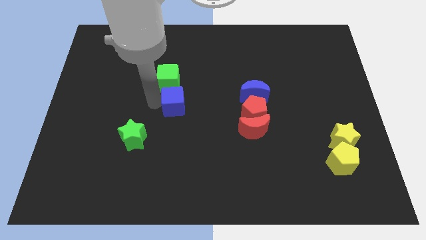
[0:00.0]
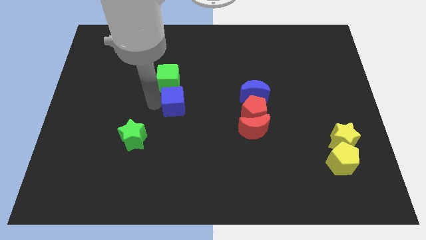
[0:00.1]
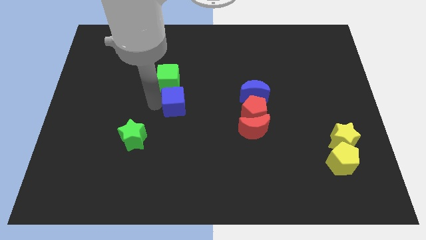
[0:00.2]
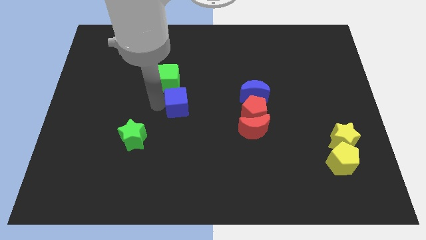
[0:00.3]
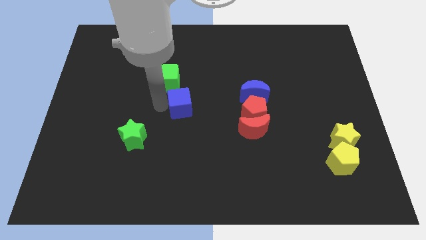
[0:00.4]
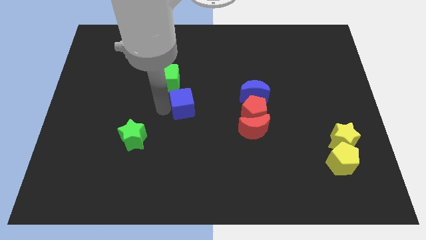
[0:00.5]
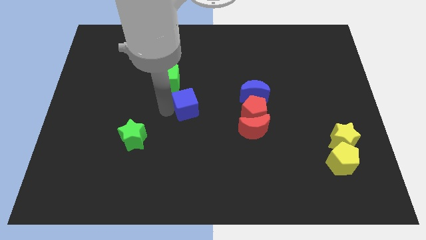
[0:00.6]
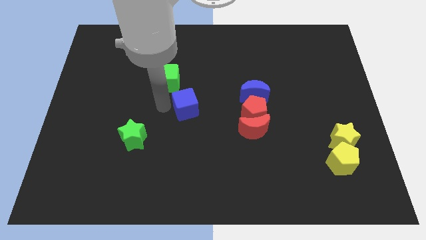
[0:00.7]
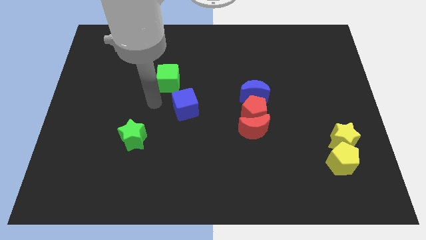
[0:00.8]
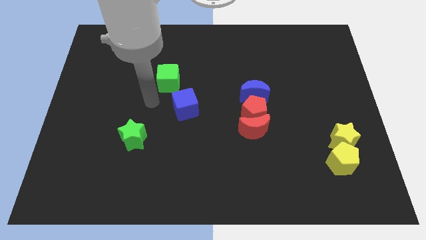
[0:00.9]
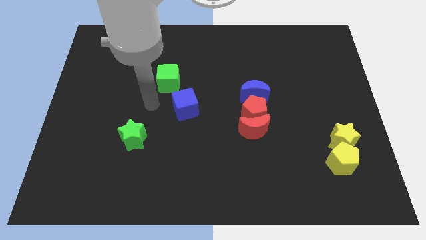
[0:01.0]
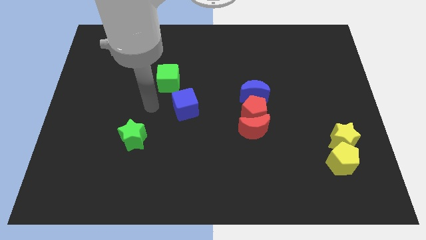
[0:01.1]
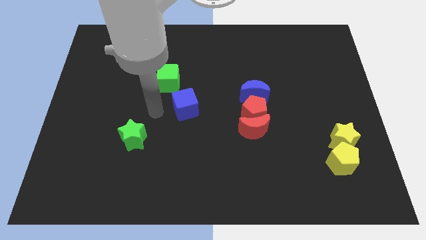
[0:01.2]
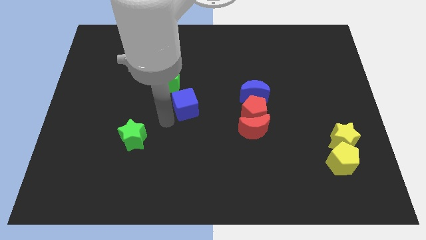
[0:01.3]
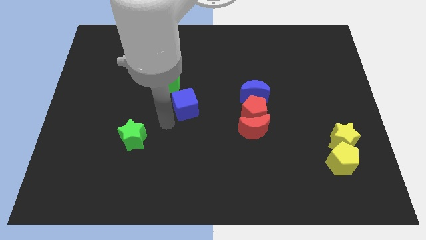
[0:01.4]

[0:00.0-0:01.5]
separate blue cube from green cube

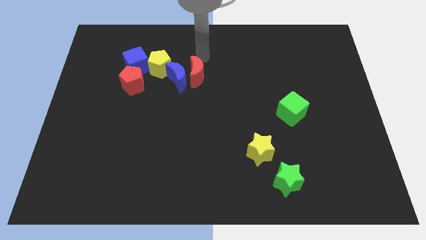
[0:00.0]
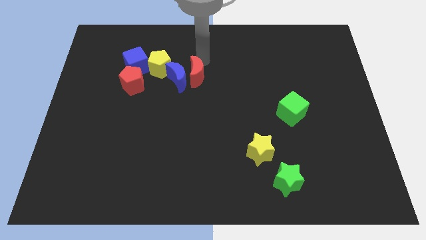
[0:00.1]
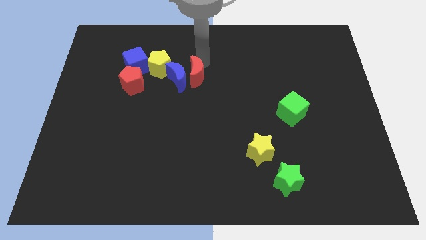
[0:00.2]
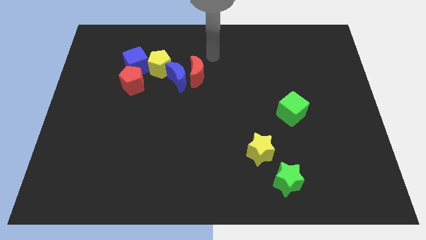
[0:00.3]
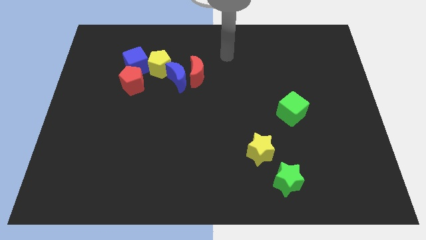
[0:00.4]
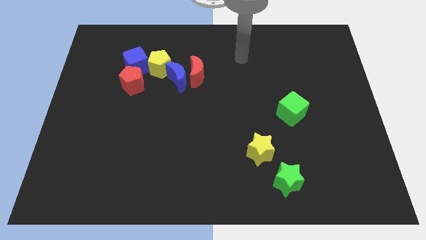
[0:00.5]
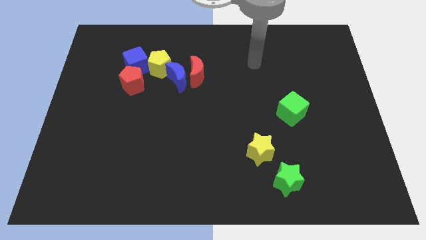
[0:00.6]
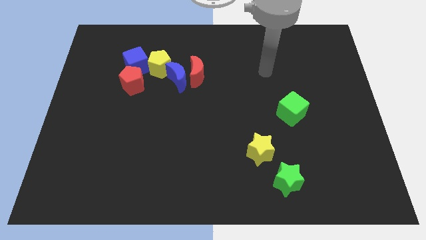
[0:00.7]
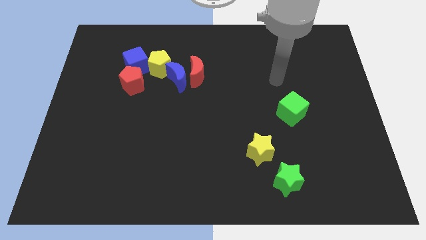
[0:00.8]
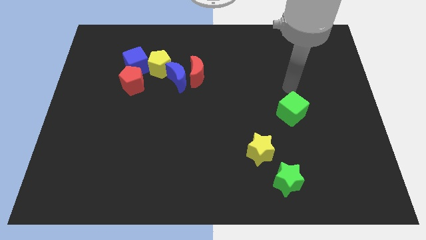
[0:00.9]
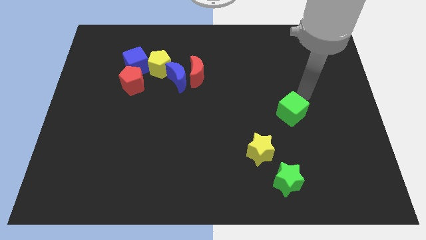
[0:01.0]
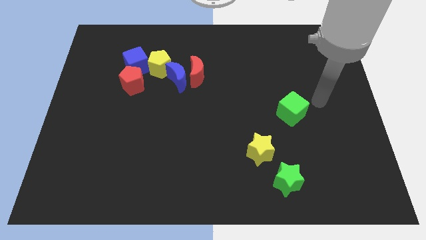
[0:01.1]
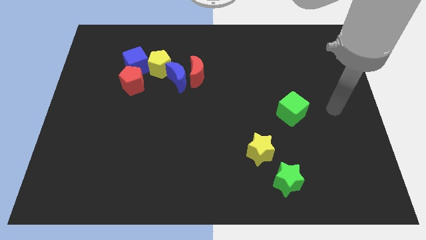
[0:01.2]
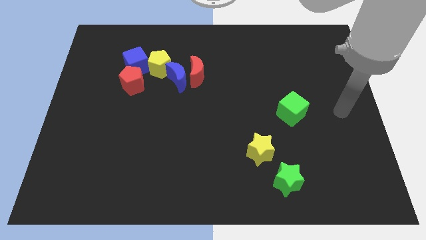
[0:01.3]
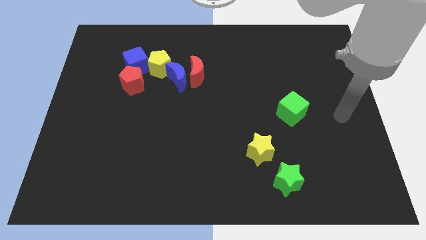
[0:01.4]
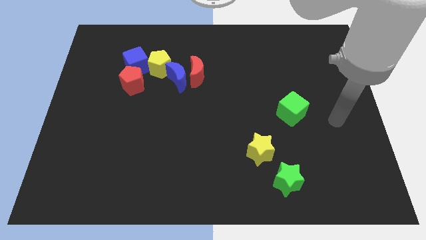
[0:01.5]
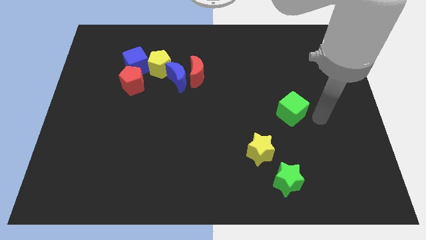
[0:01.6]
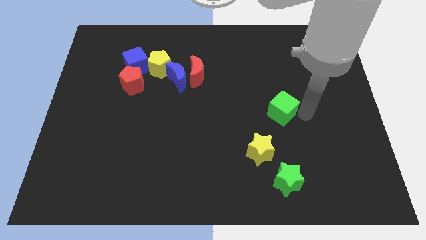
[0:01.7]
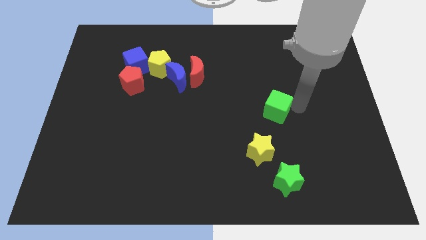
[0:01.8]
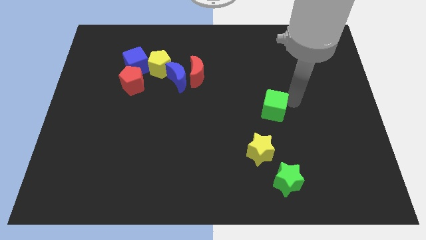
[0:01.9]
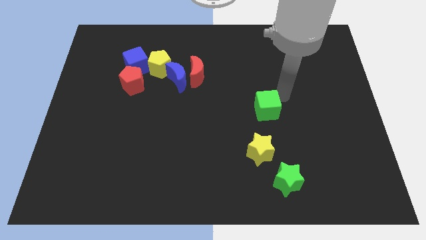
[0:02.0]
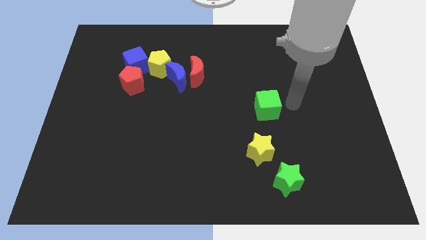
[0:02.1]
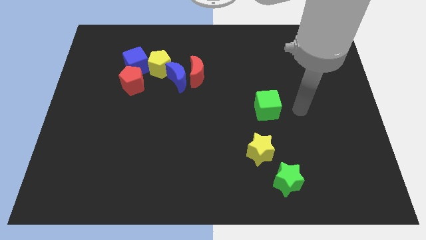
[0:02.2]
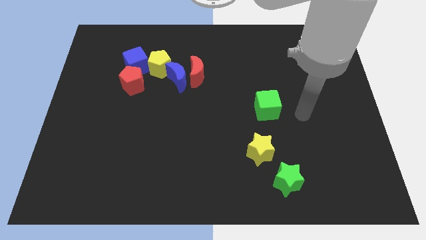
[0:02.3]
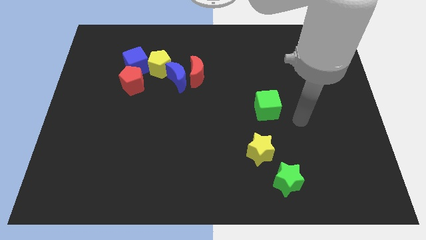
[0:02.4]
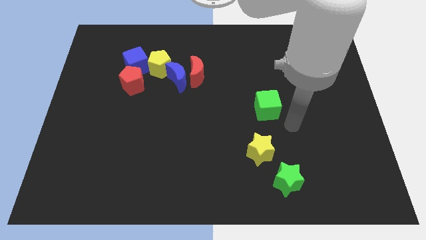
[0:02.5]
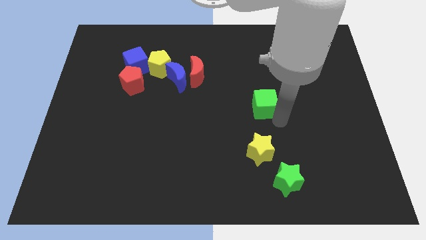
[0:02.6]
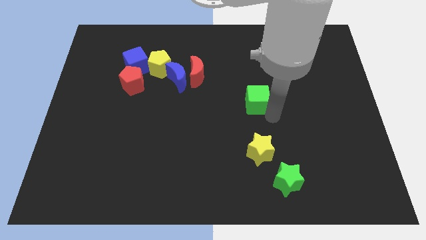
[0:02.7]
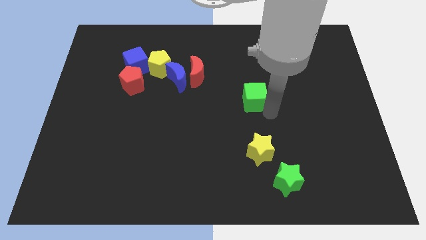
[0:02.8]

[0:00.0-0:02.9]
place the yellow star above the green cube

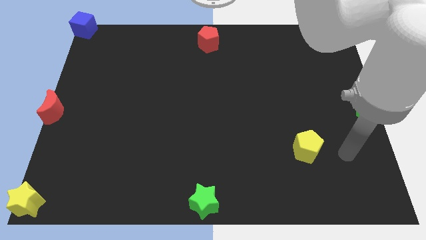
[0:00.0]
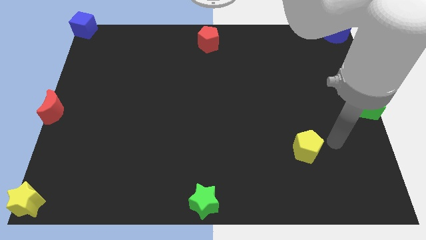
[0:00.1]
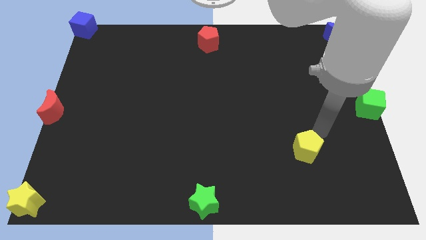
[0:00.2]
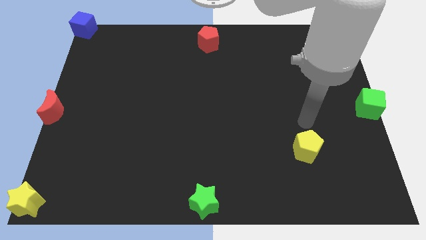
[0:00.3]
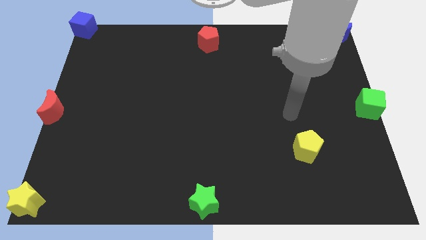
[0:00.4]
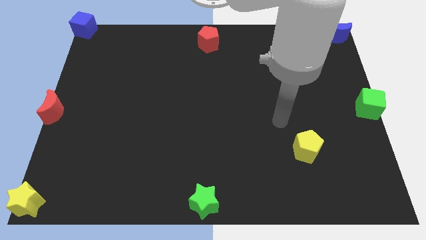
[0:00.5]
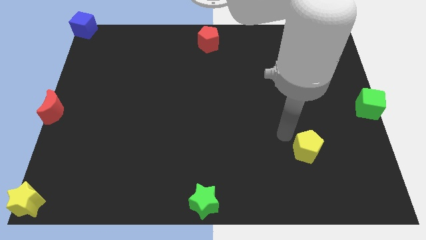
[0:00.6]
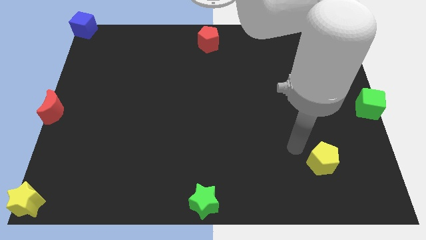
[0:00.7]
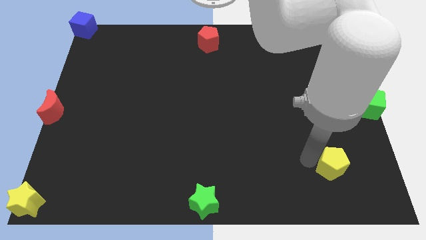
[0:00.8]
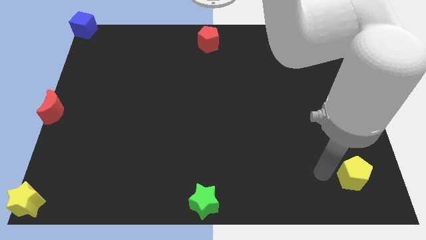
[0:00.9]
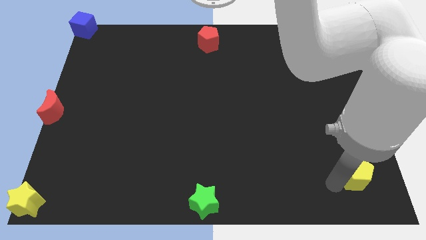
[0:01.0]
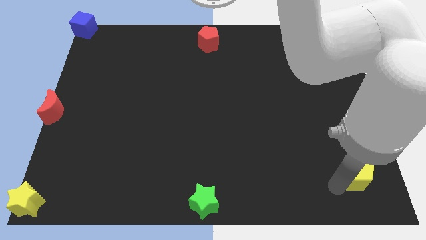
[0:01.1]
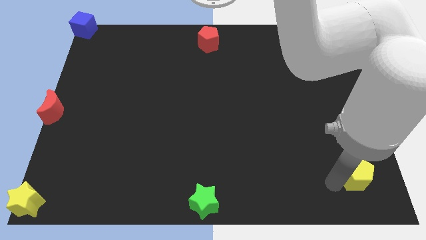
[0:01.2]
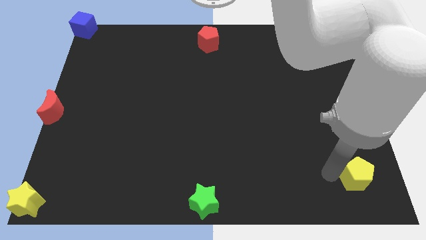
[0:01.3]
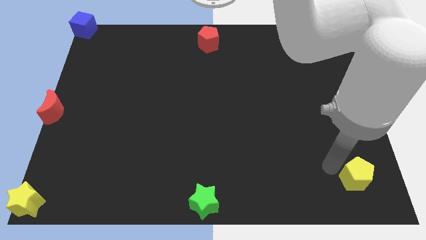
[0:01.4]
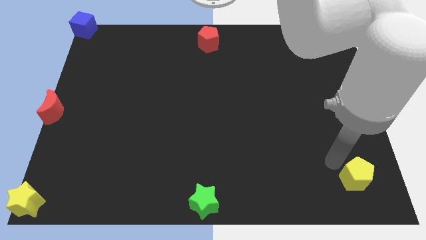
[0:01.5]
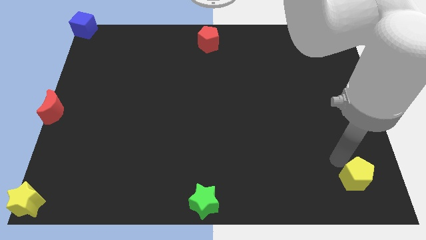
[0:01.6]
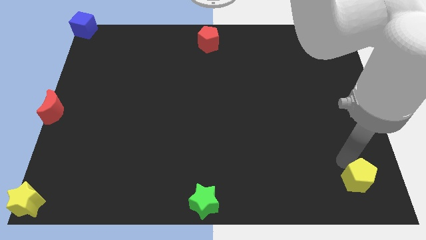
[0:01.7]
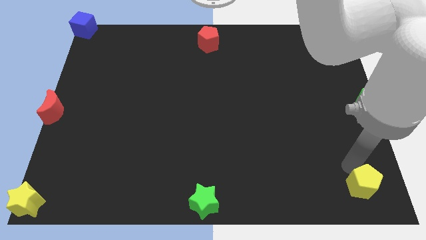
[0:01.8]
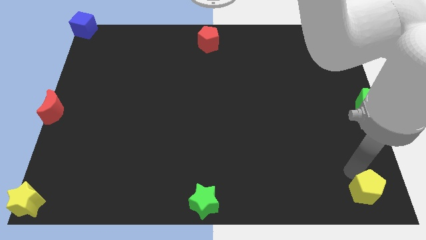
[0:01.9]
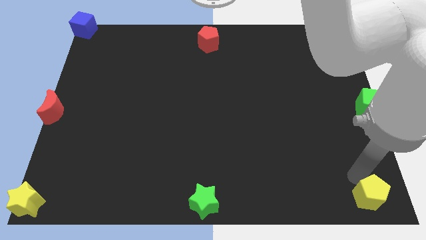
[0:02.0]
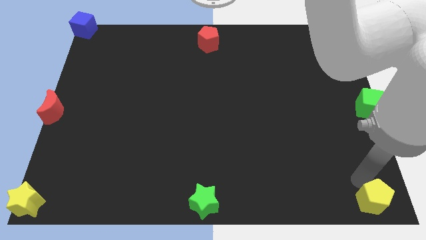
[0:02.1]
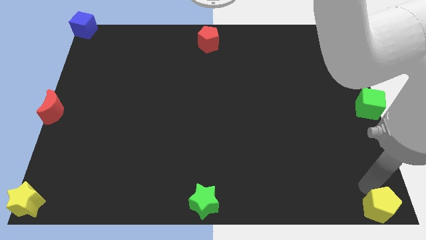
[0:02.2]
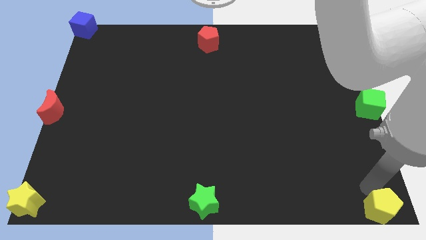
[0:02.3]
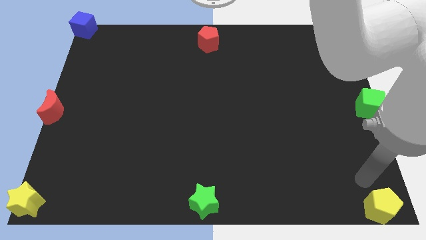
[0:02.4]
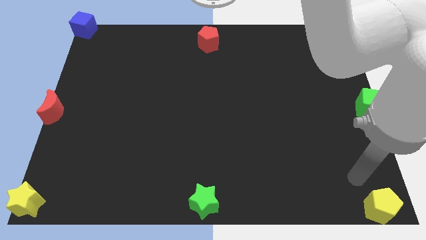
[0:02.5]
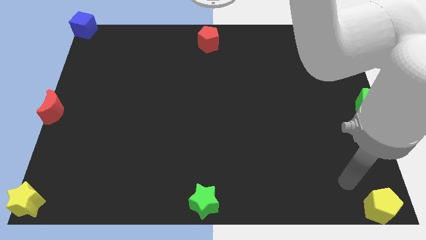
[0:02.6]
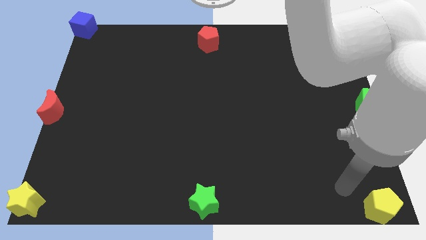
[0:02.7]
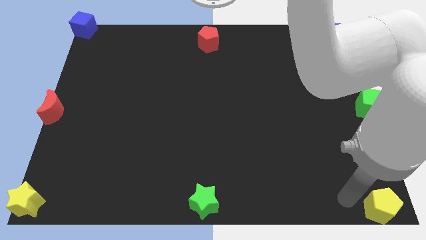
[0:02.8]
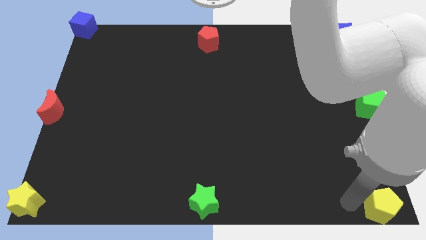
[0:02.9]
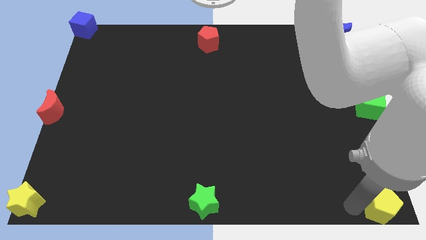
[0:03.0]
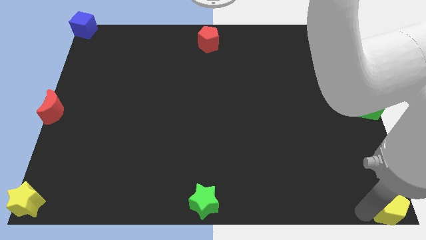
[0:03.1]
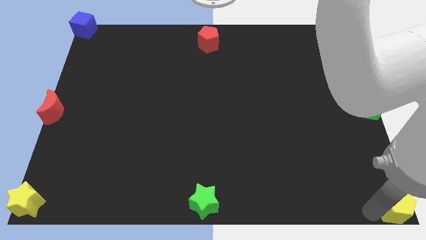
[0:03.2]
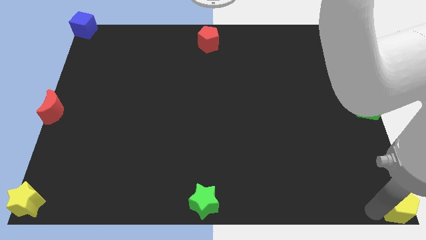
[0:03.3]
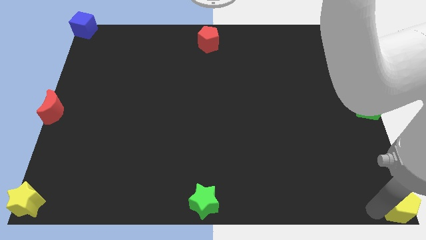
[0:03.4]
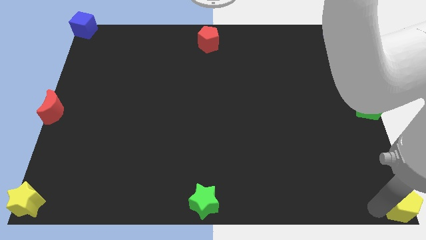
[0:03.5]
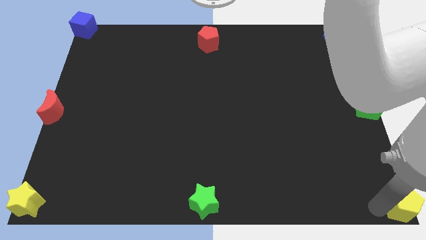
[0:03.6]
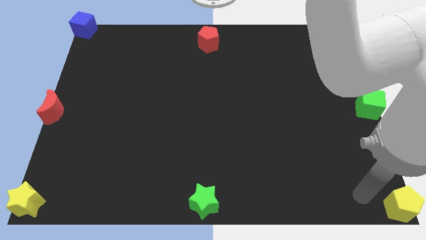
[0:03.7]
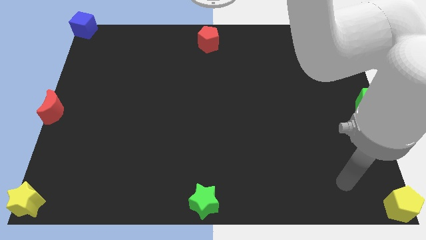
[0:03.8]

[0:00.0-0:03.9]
move yellow pentagon bottom right of the board

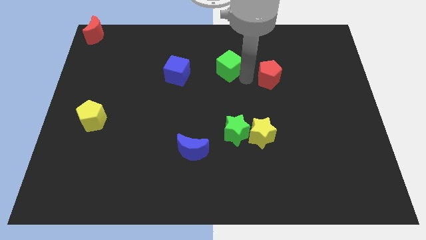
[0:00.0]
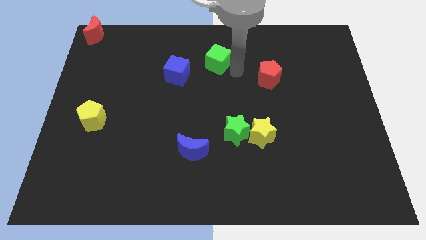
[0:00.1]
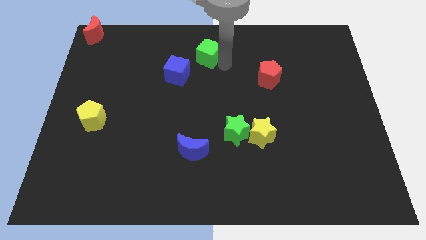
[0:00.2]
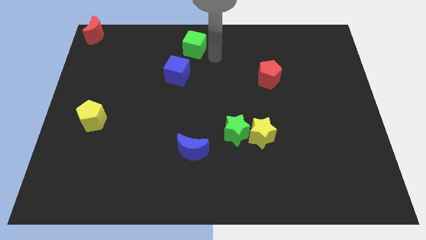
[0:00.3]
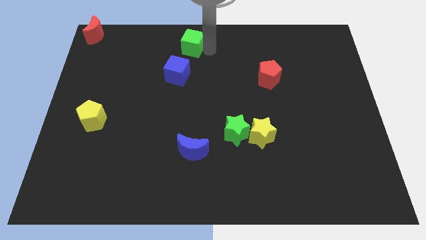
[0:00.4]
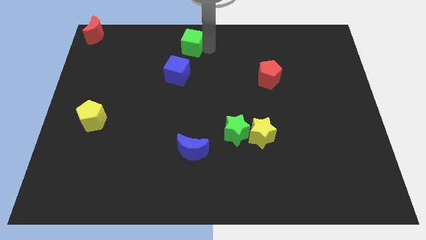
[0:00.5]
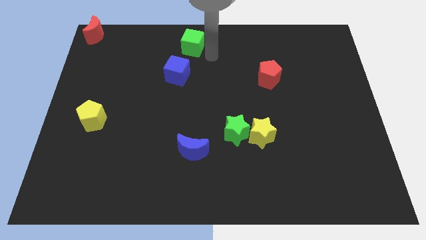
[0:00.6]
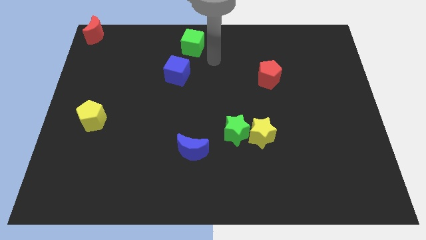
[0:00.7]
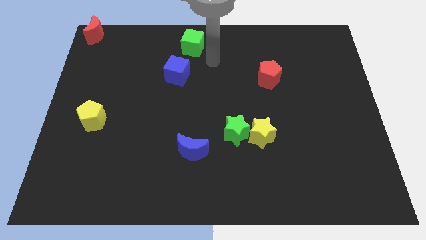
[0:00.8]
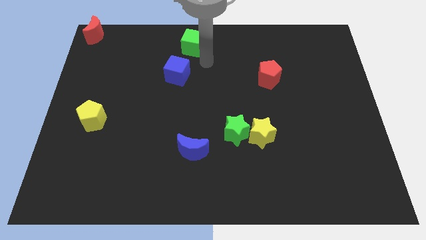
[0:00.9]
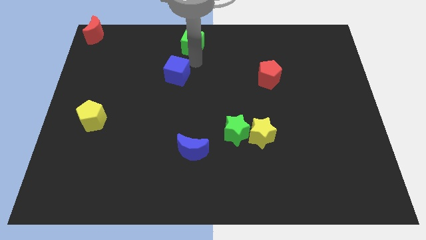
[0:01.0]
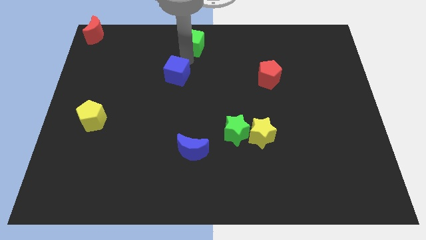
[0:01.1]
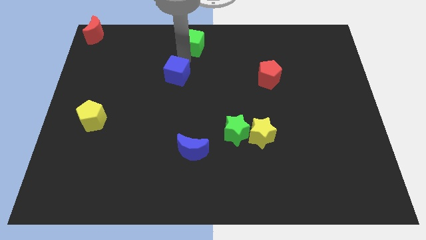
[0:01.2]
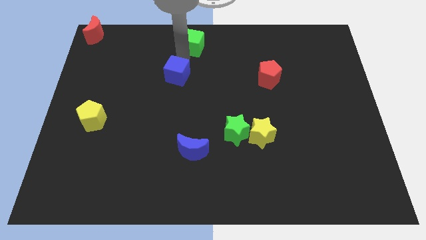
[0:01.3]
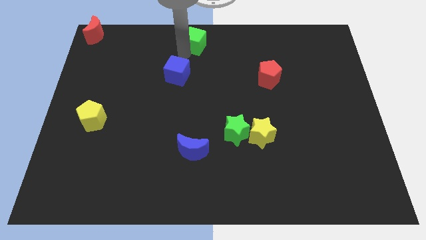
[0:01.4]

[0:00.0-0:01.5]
place the green cube above the blue cube
